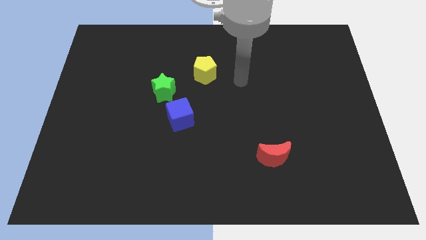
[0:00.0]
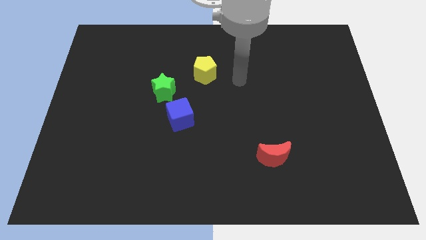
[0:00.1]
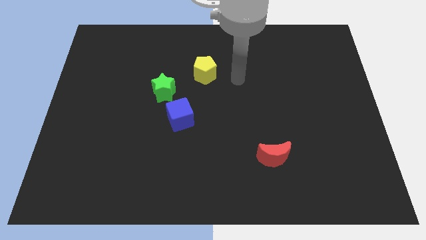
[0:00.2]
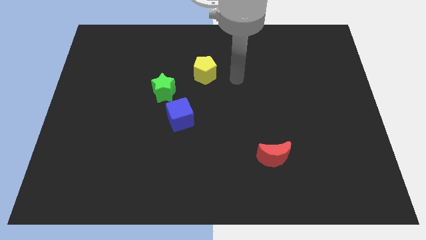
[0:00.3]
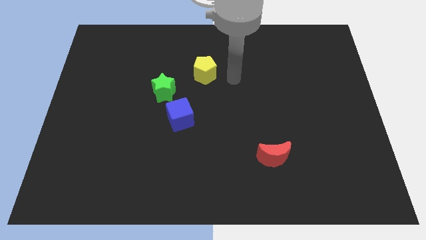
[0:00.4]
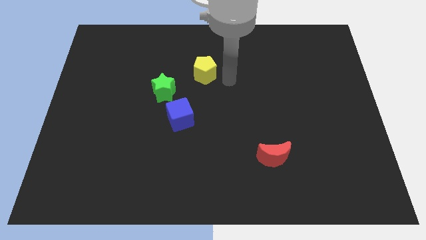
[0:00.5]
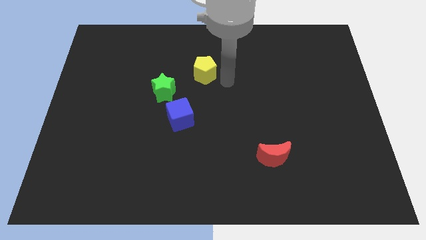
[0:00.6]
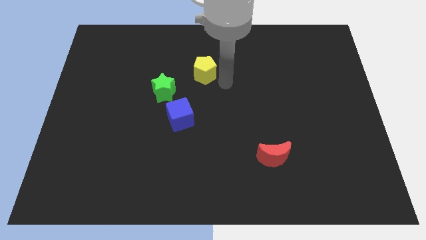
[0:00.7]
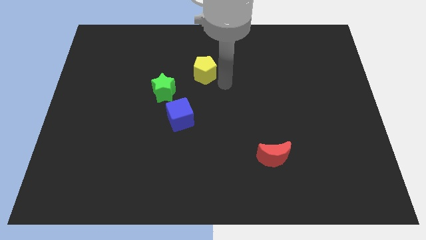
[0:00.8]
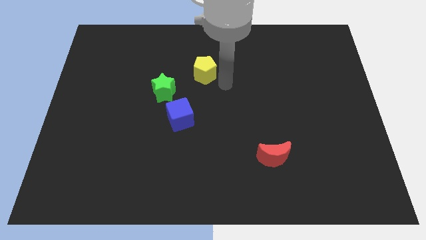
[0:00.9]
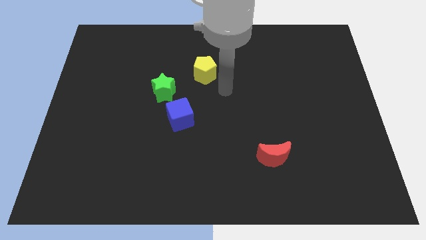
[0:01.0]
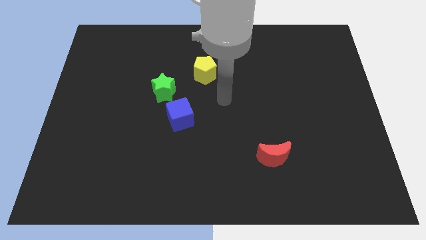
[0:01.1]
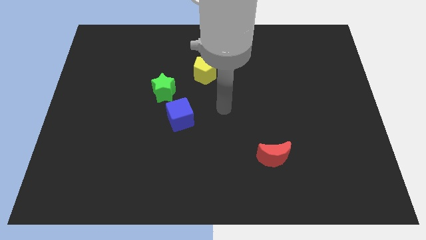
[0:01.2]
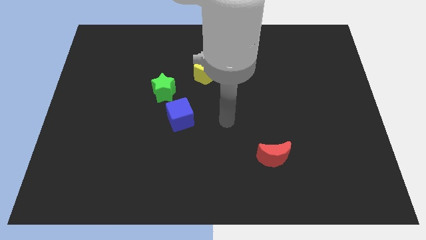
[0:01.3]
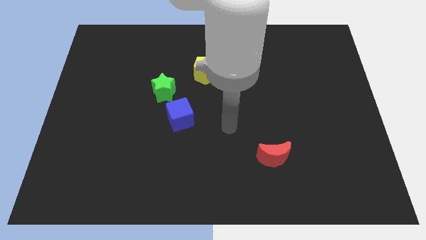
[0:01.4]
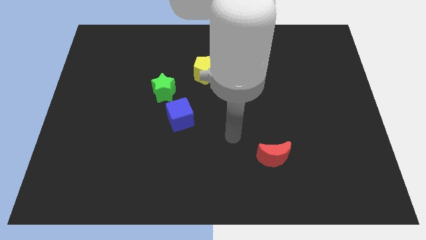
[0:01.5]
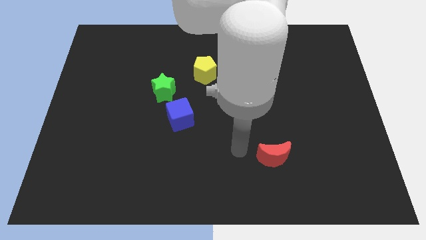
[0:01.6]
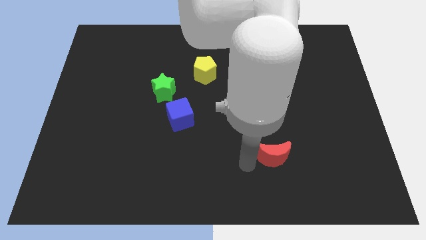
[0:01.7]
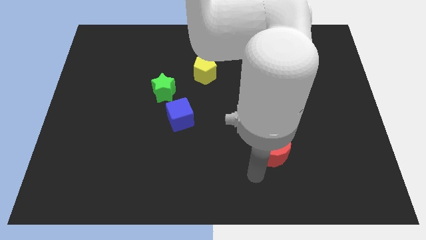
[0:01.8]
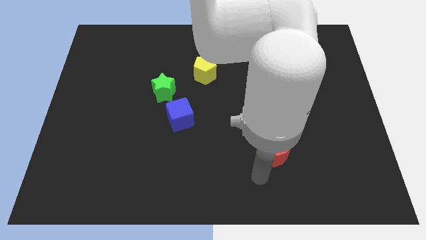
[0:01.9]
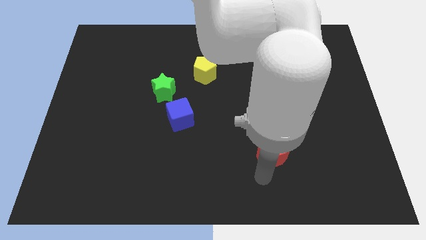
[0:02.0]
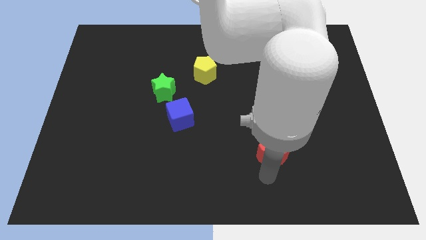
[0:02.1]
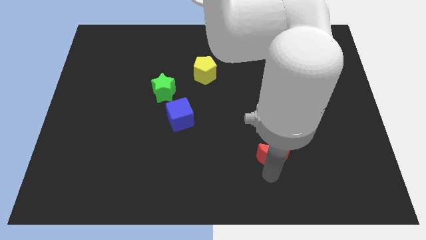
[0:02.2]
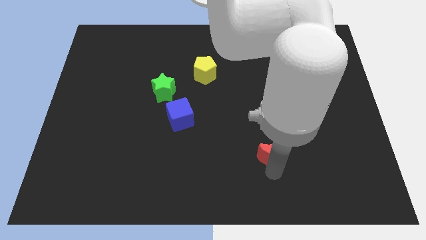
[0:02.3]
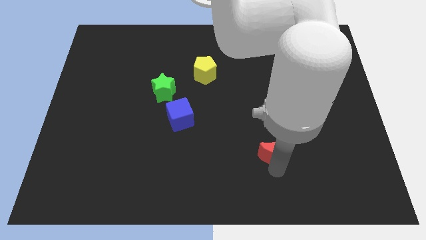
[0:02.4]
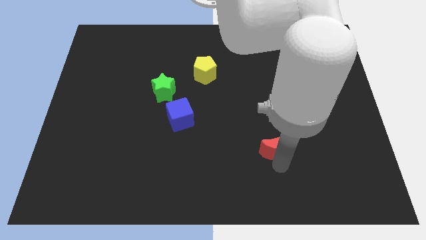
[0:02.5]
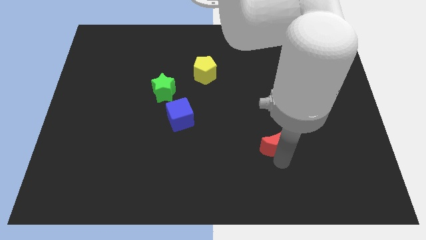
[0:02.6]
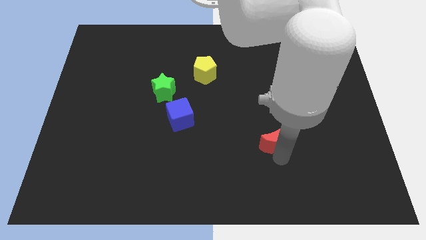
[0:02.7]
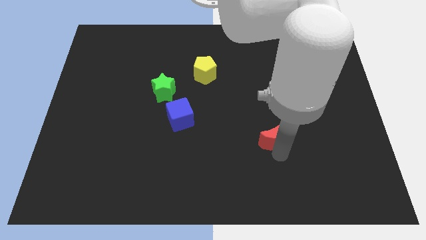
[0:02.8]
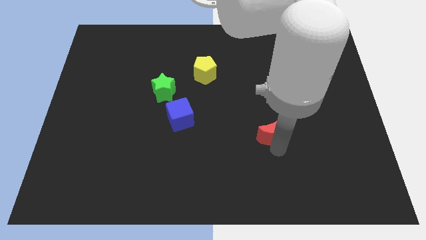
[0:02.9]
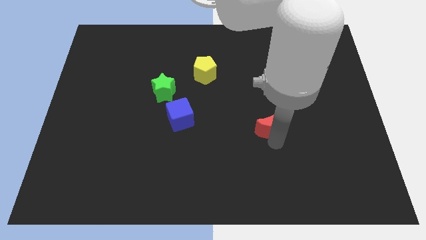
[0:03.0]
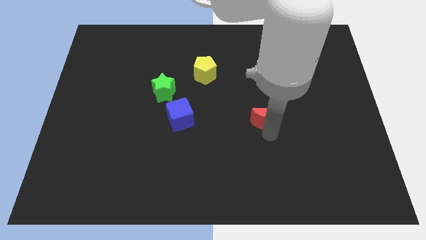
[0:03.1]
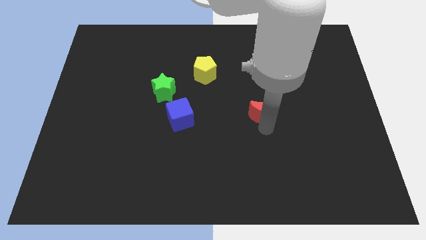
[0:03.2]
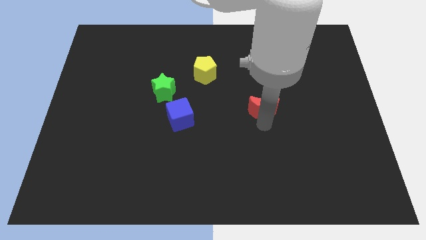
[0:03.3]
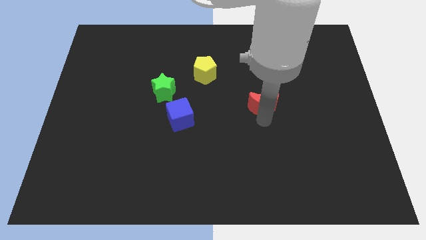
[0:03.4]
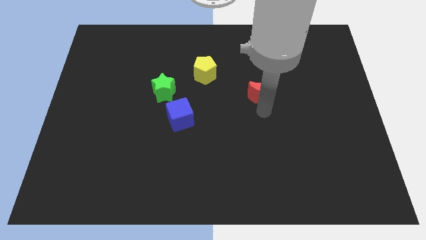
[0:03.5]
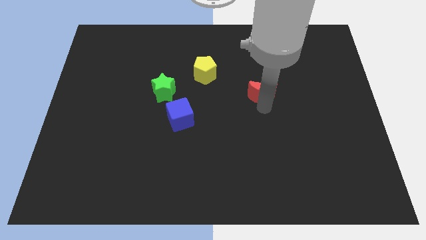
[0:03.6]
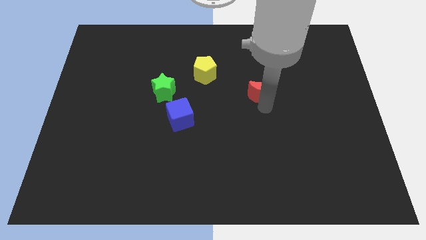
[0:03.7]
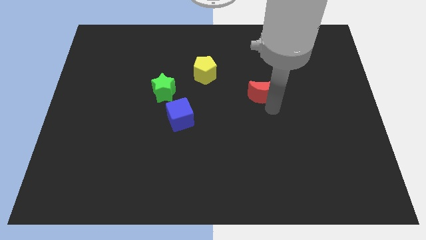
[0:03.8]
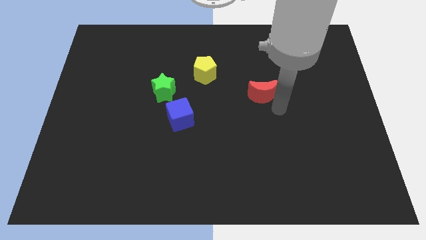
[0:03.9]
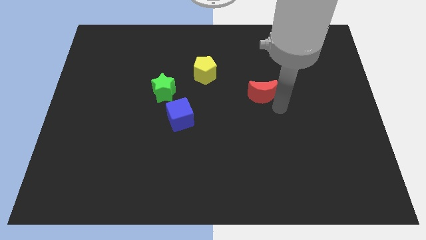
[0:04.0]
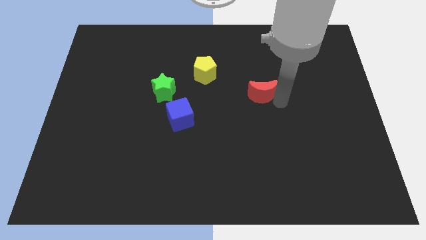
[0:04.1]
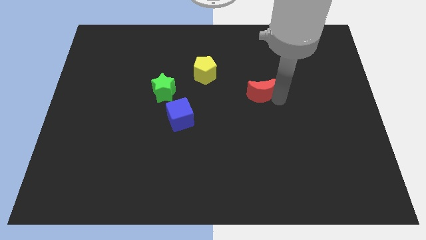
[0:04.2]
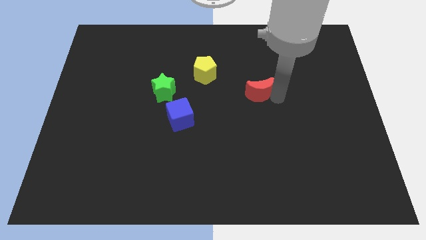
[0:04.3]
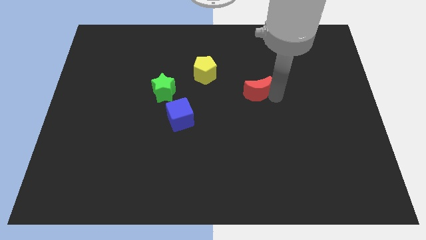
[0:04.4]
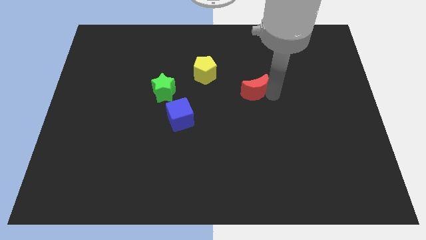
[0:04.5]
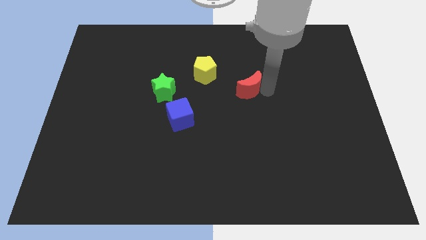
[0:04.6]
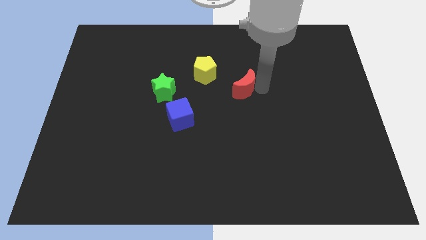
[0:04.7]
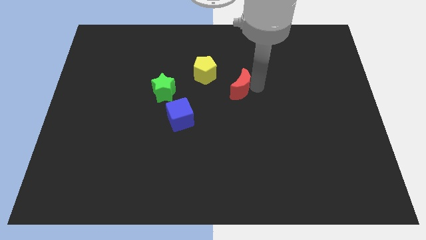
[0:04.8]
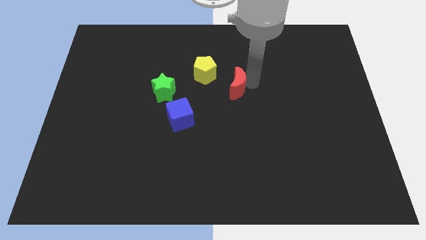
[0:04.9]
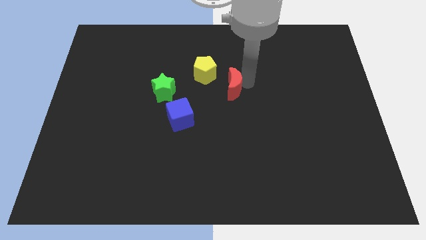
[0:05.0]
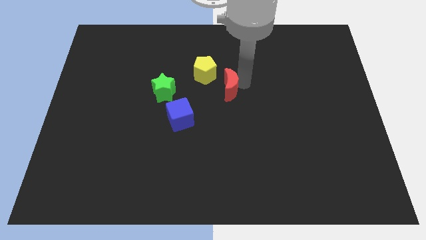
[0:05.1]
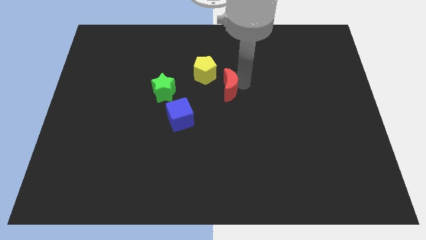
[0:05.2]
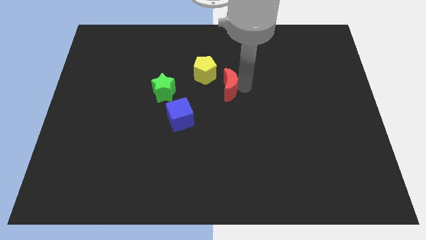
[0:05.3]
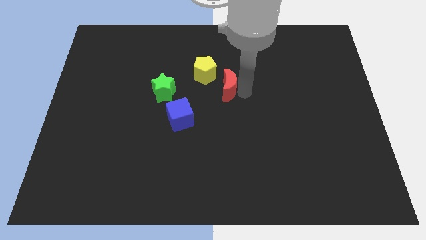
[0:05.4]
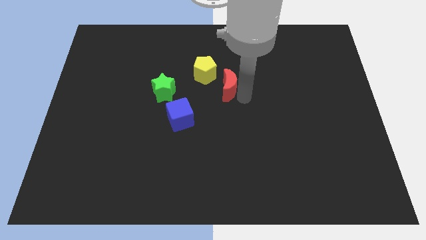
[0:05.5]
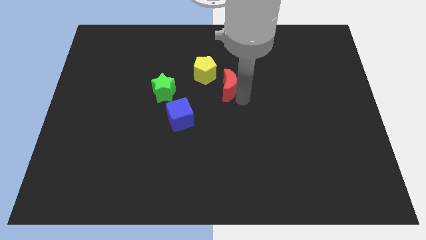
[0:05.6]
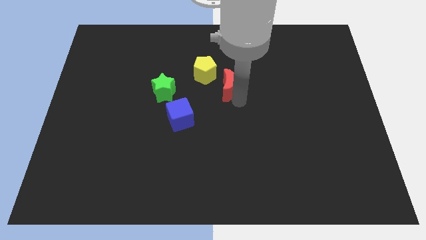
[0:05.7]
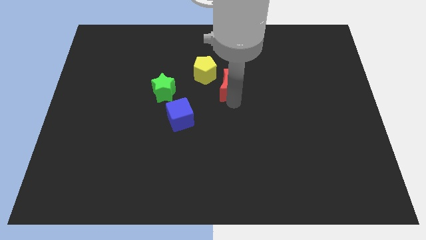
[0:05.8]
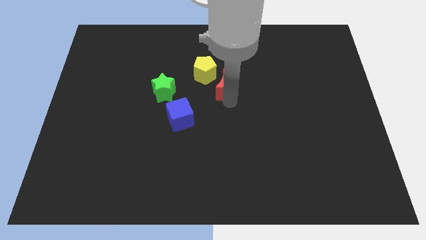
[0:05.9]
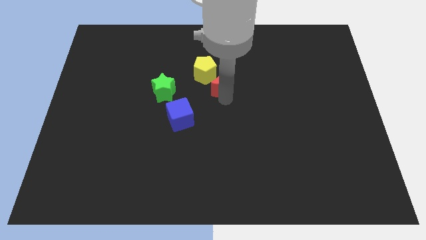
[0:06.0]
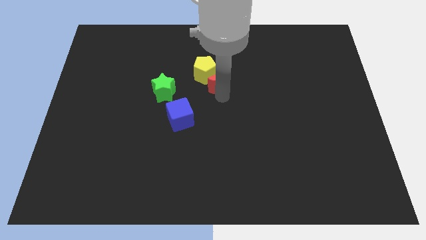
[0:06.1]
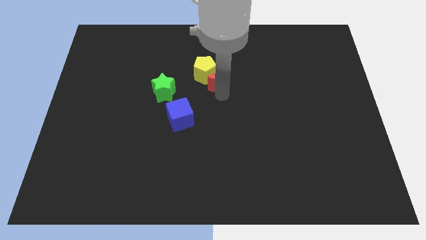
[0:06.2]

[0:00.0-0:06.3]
push the moon next to the yellow pentagon

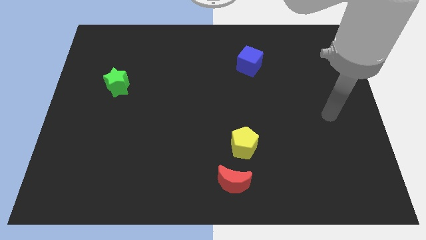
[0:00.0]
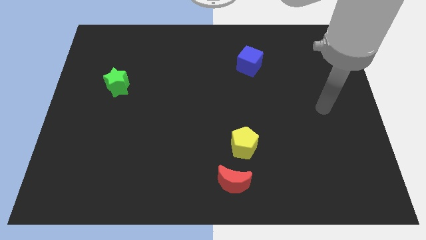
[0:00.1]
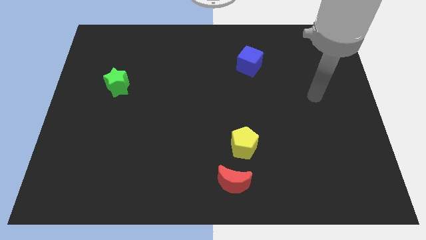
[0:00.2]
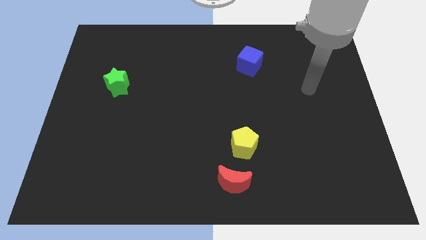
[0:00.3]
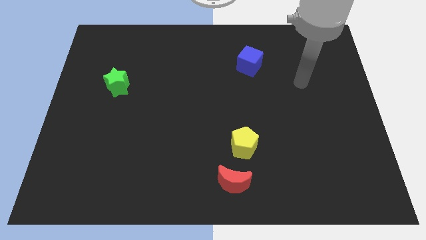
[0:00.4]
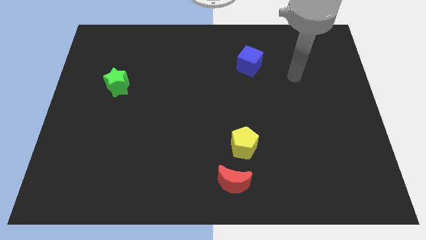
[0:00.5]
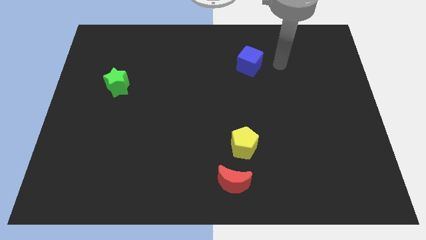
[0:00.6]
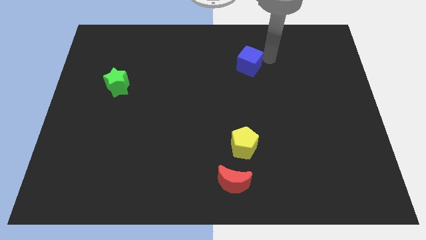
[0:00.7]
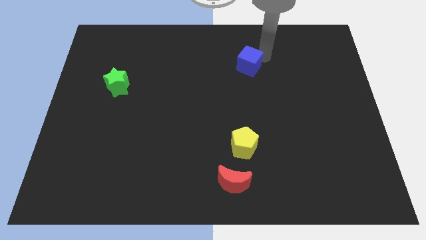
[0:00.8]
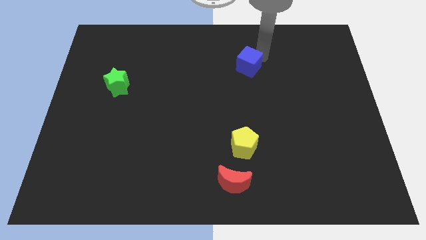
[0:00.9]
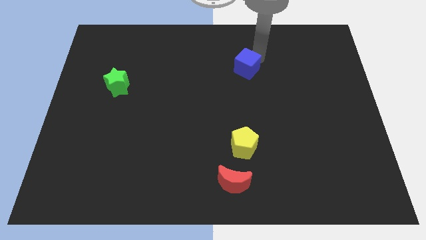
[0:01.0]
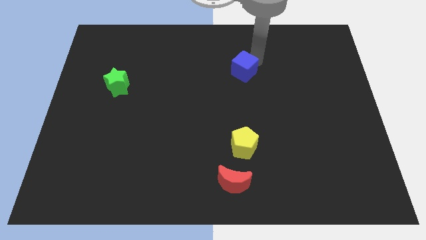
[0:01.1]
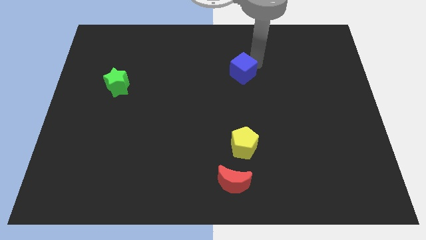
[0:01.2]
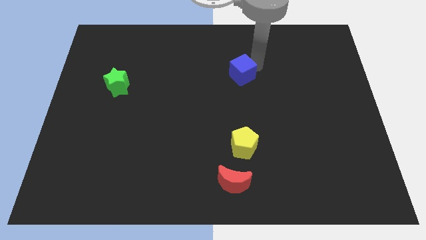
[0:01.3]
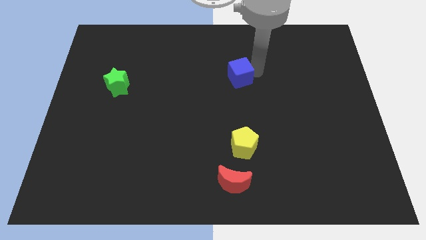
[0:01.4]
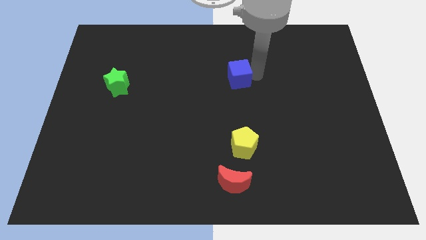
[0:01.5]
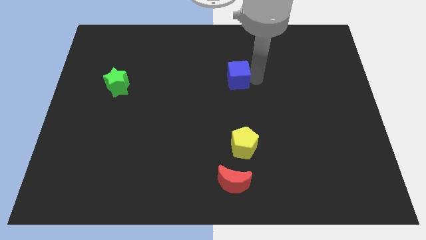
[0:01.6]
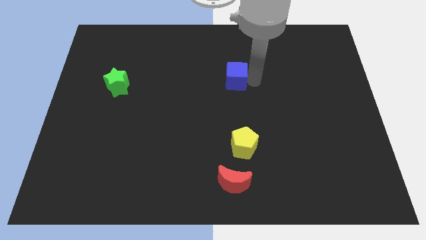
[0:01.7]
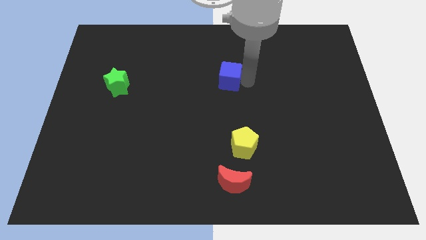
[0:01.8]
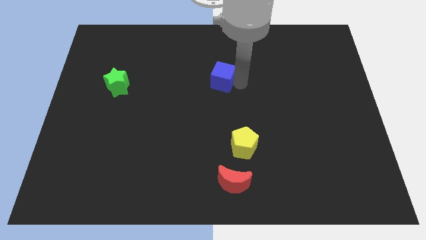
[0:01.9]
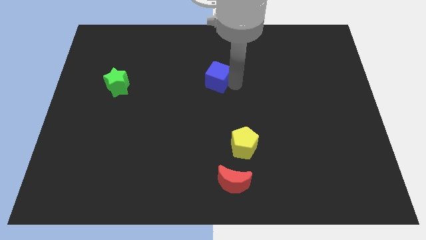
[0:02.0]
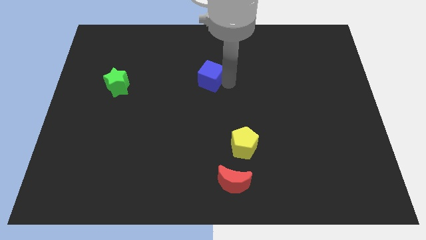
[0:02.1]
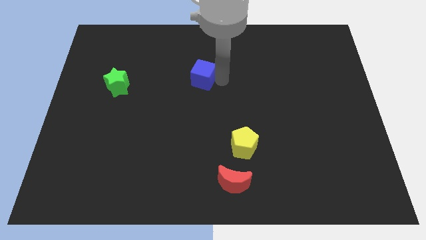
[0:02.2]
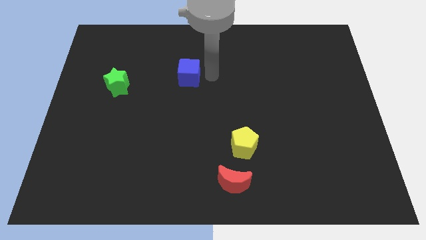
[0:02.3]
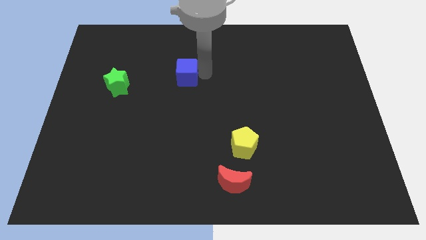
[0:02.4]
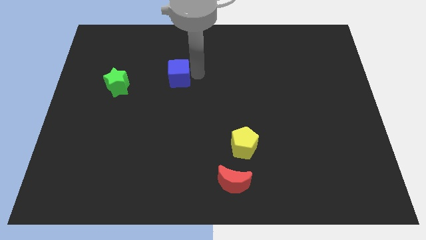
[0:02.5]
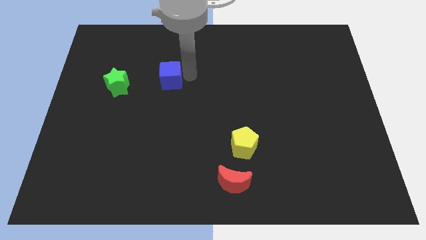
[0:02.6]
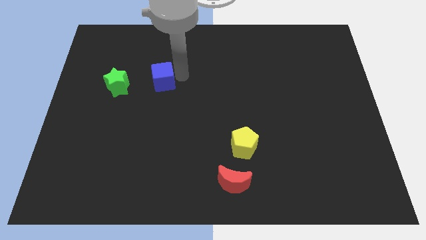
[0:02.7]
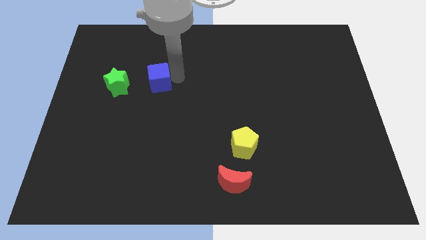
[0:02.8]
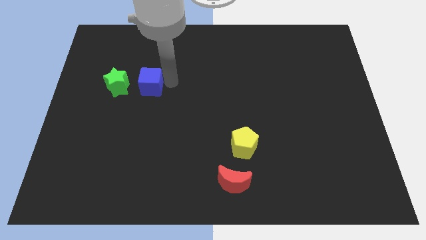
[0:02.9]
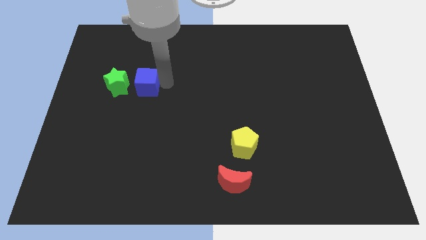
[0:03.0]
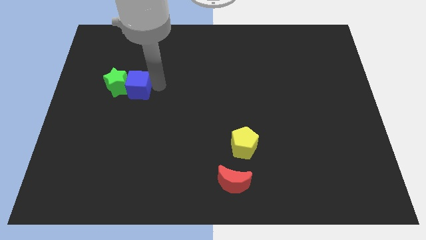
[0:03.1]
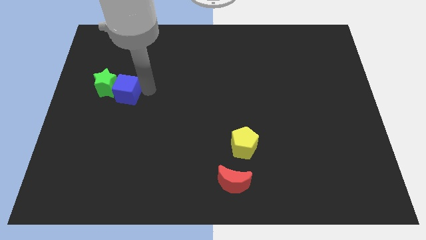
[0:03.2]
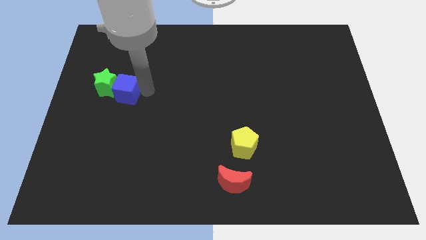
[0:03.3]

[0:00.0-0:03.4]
move the blue cube towards the green block
